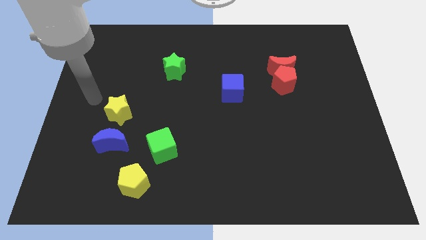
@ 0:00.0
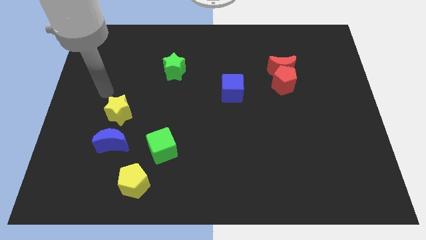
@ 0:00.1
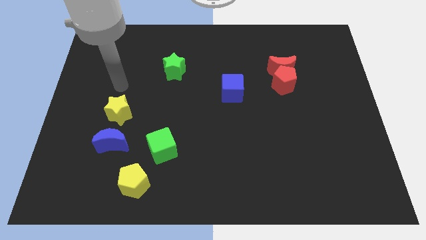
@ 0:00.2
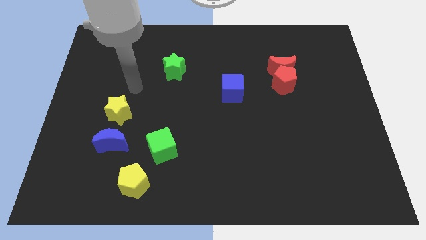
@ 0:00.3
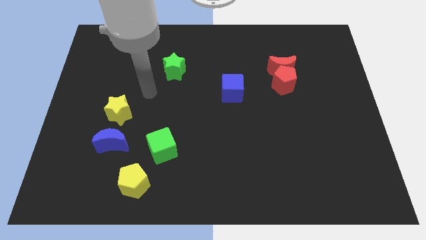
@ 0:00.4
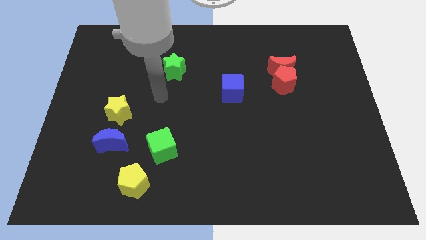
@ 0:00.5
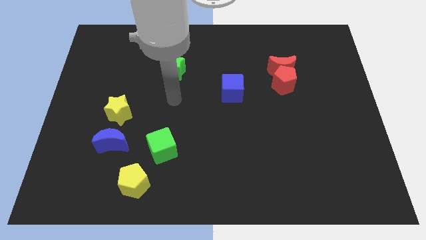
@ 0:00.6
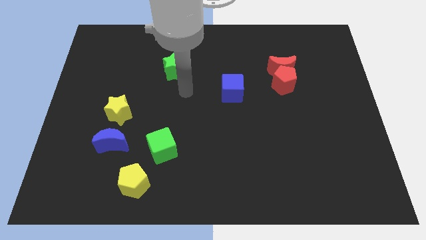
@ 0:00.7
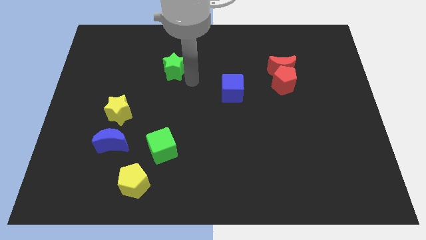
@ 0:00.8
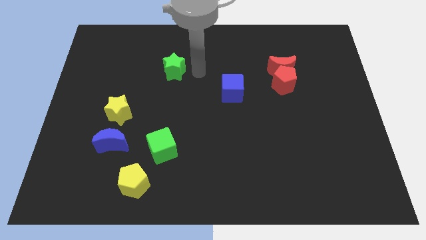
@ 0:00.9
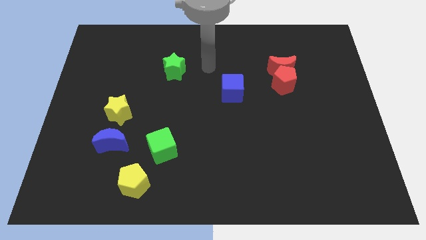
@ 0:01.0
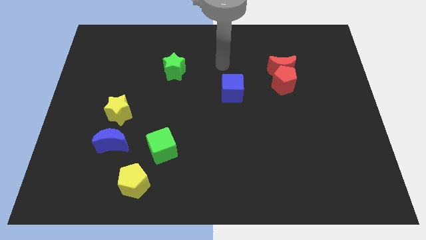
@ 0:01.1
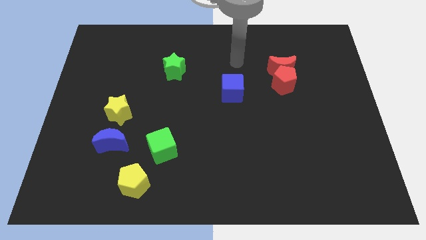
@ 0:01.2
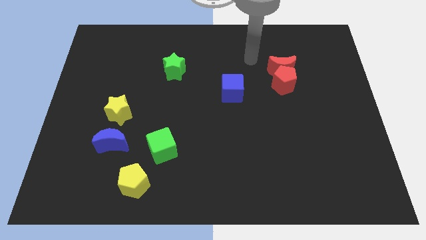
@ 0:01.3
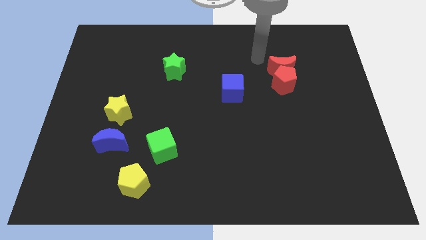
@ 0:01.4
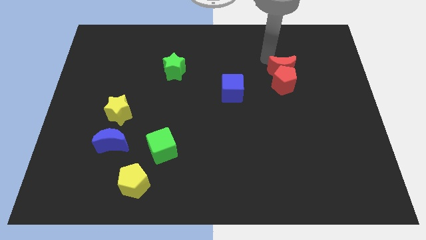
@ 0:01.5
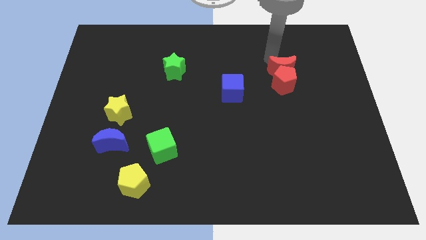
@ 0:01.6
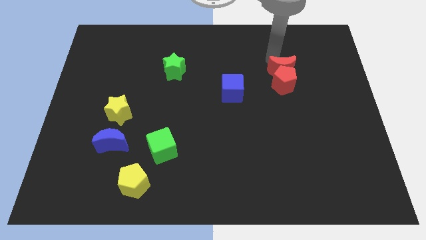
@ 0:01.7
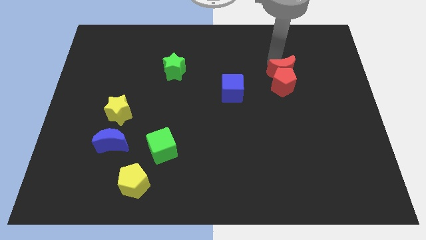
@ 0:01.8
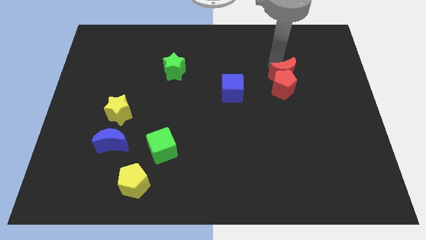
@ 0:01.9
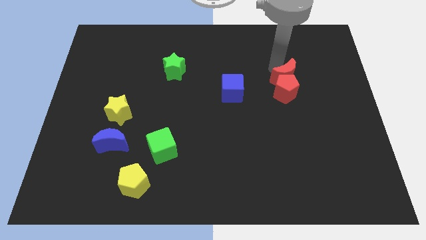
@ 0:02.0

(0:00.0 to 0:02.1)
move your arm towards the red moon

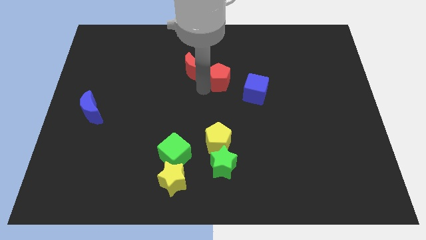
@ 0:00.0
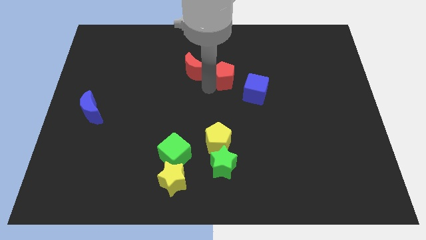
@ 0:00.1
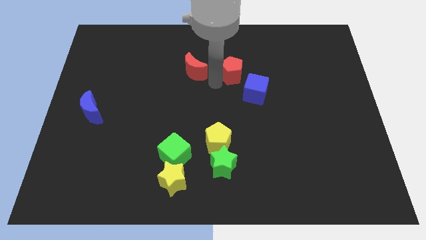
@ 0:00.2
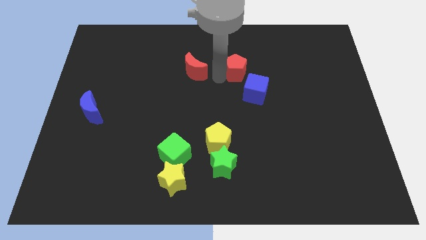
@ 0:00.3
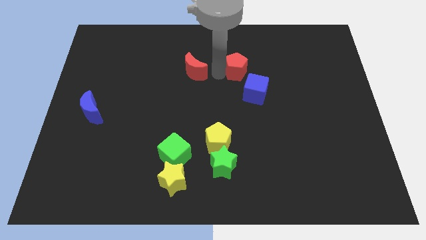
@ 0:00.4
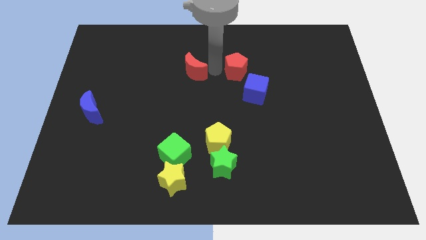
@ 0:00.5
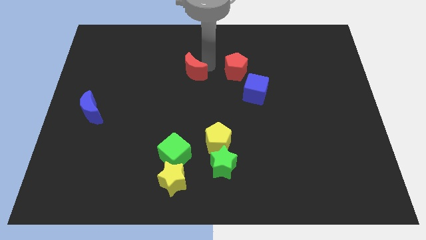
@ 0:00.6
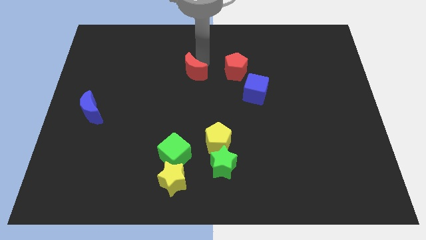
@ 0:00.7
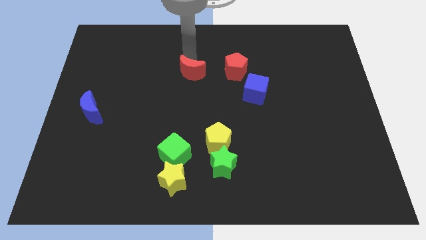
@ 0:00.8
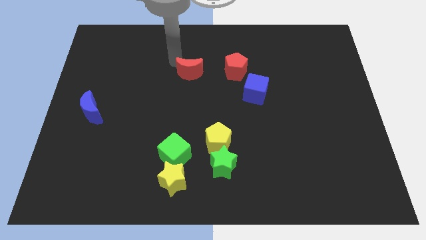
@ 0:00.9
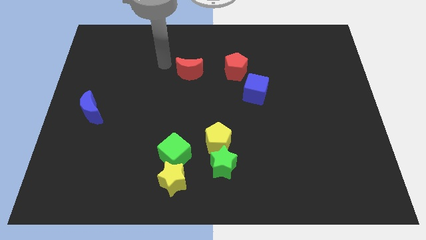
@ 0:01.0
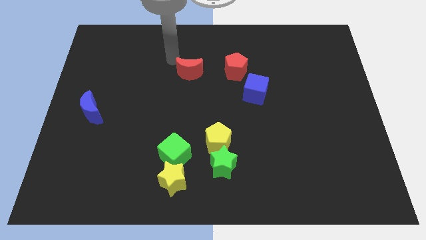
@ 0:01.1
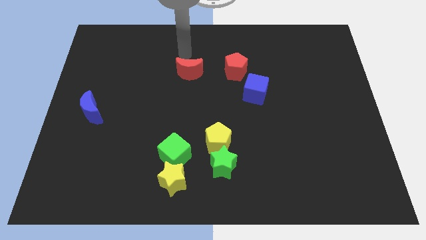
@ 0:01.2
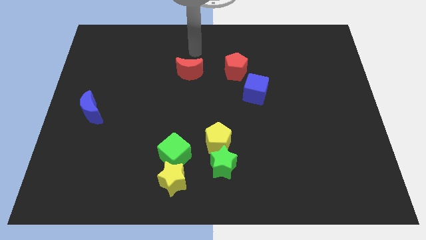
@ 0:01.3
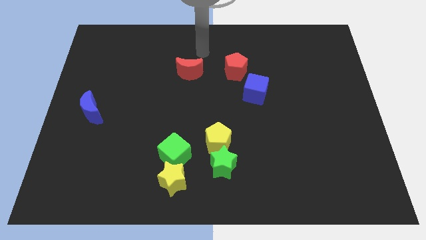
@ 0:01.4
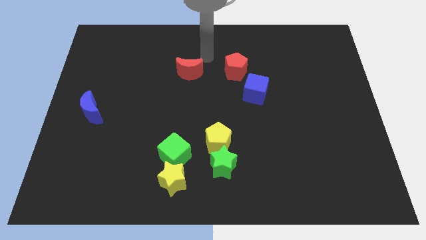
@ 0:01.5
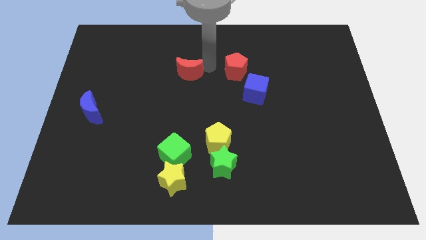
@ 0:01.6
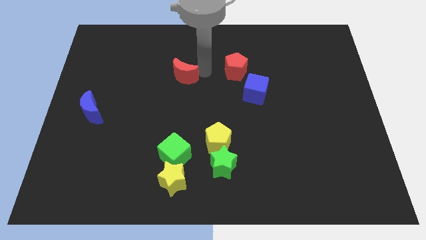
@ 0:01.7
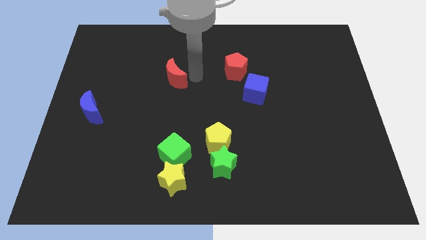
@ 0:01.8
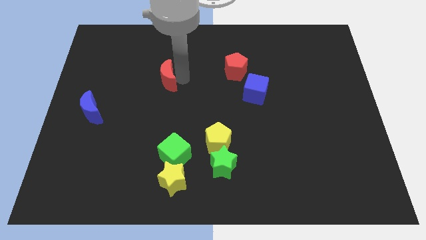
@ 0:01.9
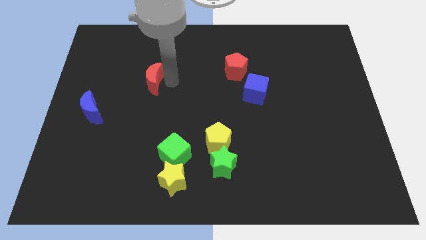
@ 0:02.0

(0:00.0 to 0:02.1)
slide the red crescent diagonally to yellow pentagon

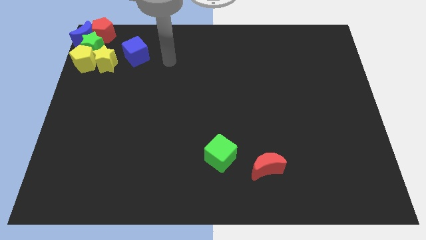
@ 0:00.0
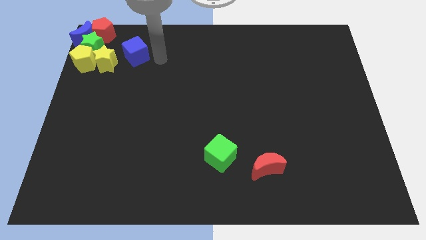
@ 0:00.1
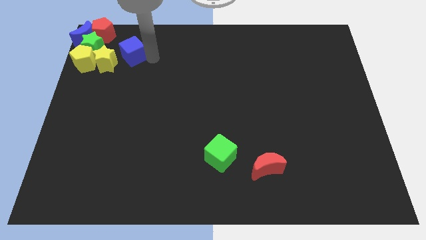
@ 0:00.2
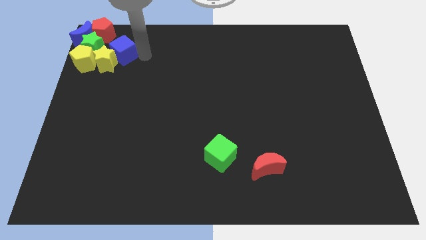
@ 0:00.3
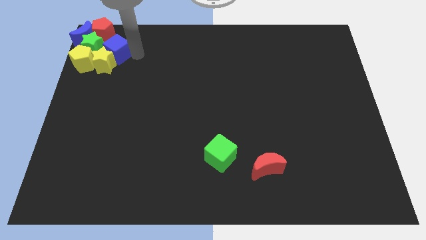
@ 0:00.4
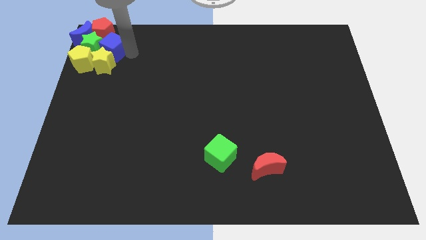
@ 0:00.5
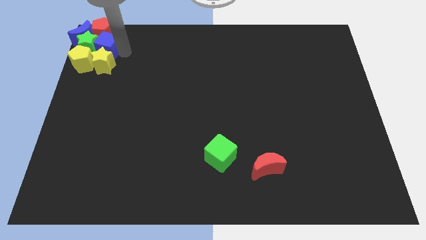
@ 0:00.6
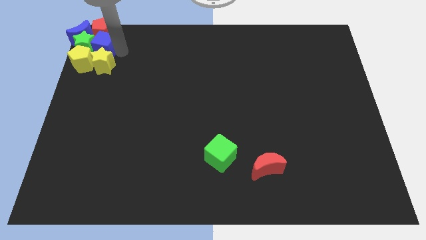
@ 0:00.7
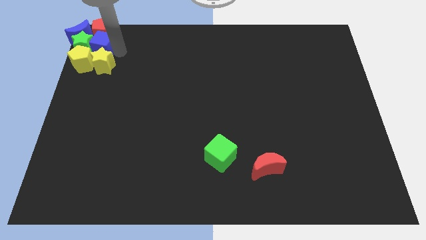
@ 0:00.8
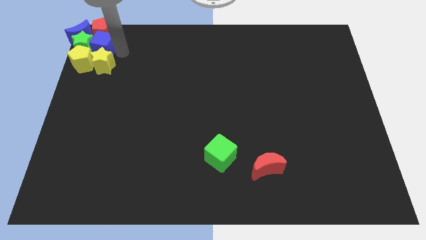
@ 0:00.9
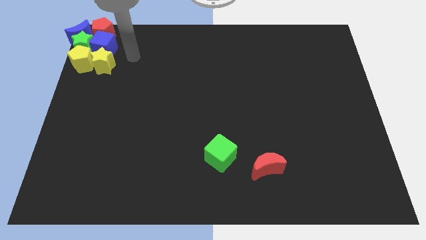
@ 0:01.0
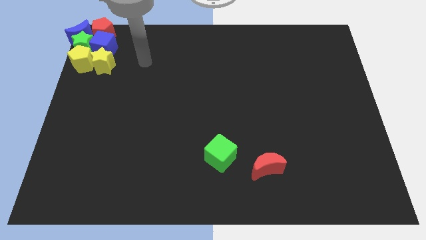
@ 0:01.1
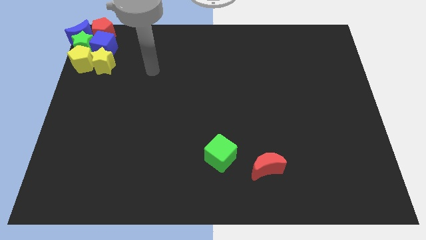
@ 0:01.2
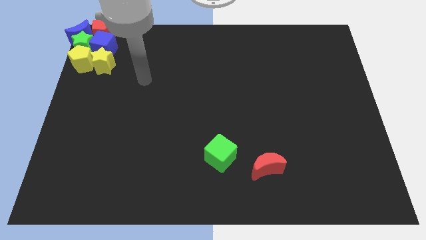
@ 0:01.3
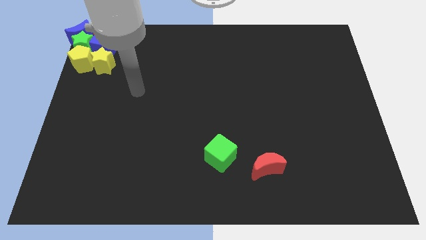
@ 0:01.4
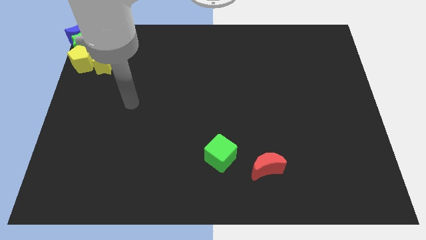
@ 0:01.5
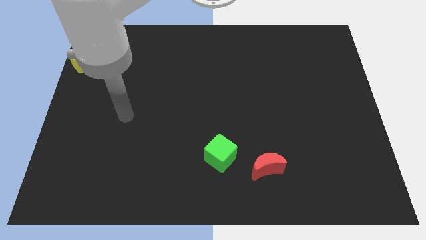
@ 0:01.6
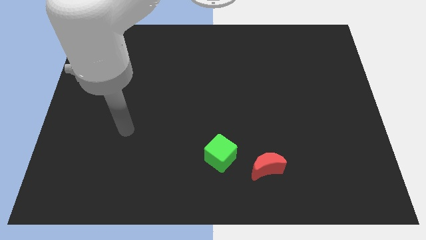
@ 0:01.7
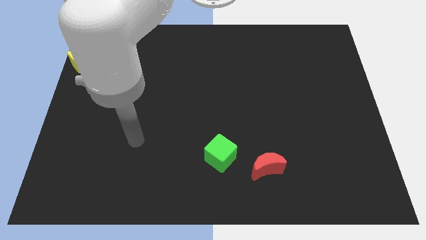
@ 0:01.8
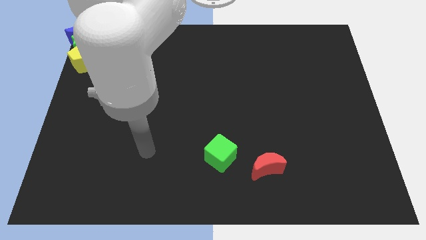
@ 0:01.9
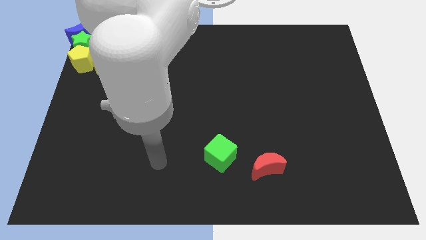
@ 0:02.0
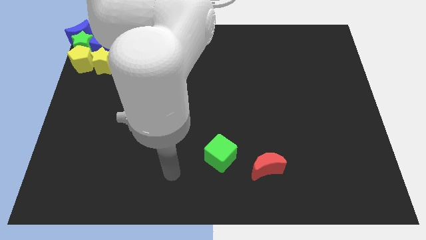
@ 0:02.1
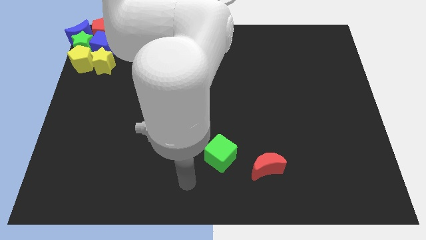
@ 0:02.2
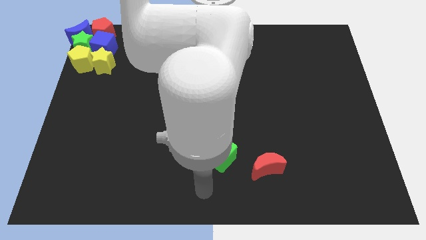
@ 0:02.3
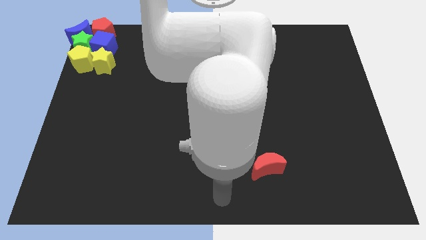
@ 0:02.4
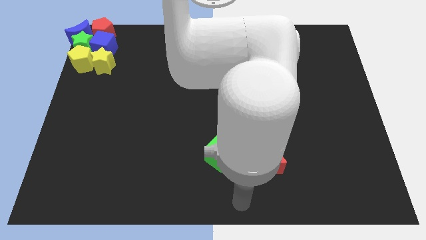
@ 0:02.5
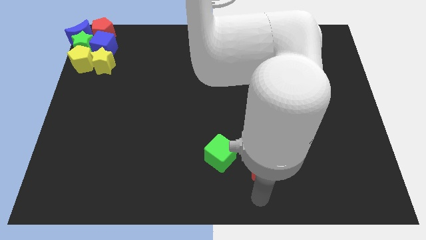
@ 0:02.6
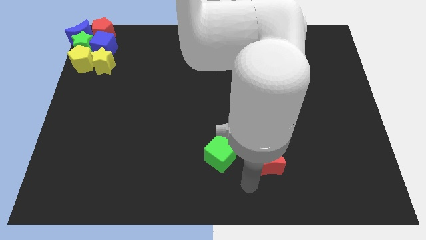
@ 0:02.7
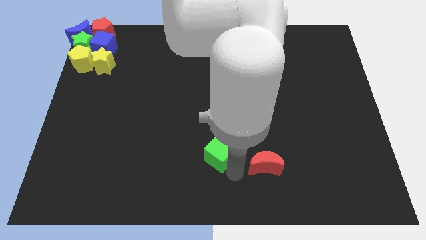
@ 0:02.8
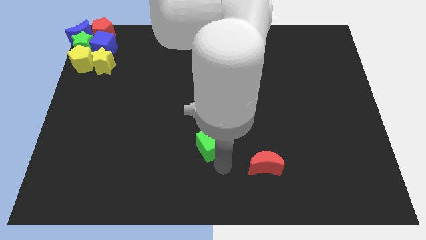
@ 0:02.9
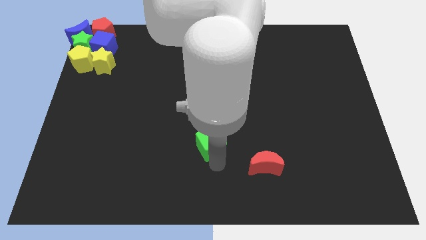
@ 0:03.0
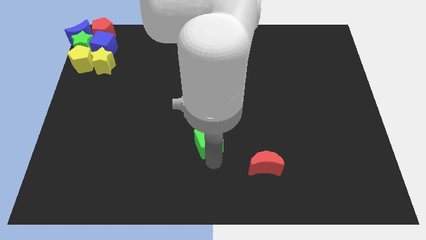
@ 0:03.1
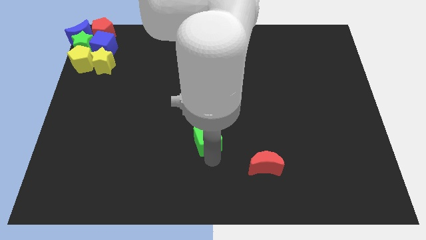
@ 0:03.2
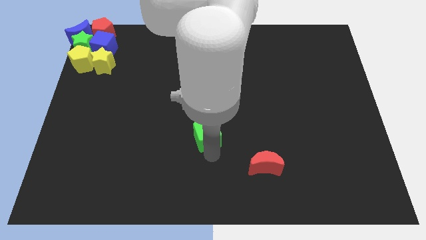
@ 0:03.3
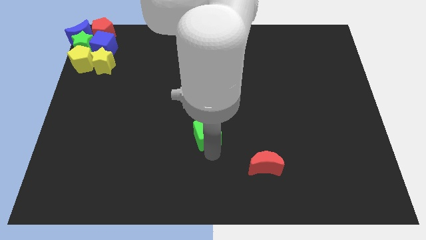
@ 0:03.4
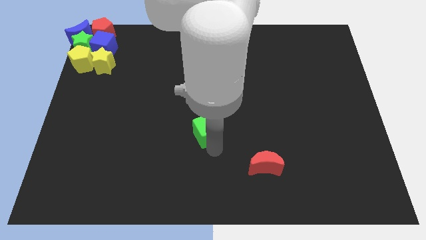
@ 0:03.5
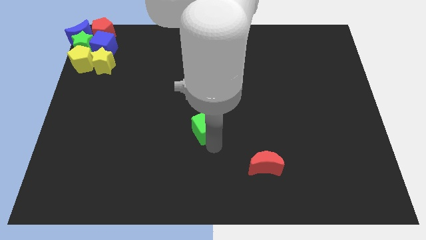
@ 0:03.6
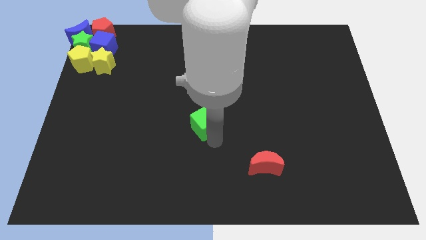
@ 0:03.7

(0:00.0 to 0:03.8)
push the green cube diagonally to the red moon

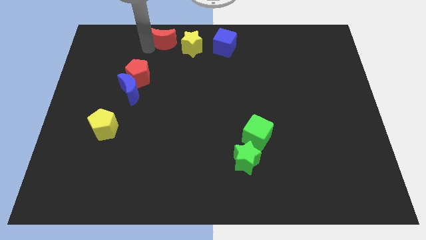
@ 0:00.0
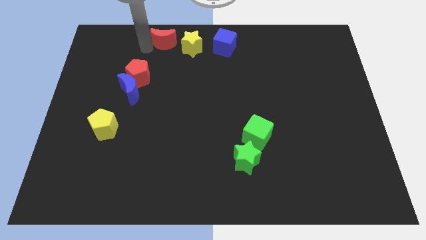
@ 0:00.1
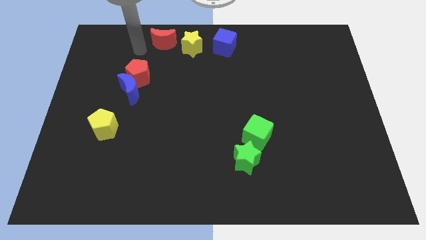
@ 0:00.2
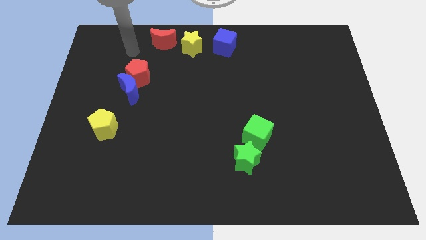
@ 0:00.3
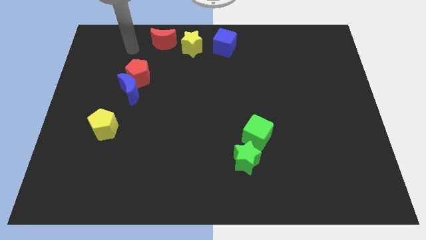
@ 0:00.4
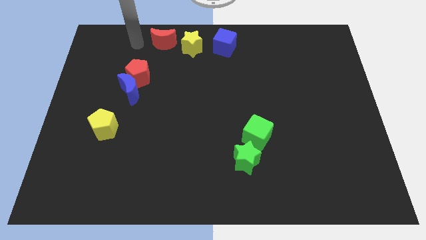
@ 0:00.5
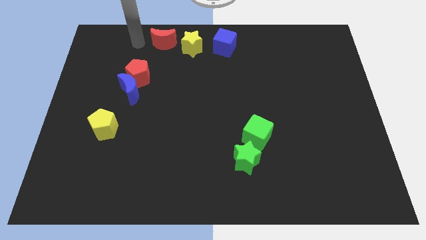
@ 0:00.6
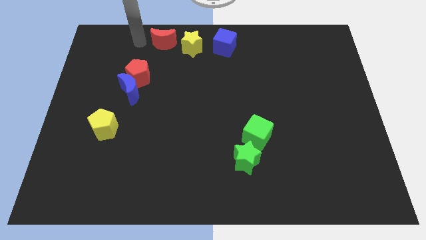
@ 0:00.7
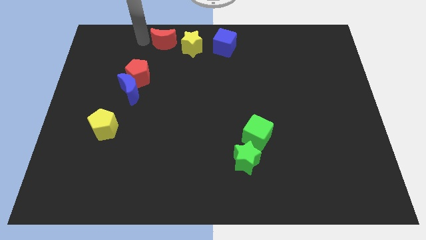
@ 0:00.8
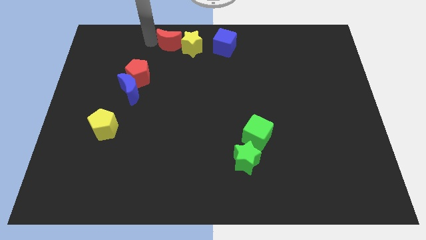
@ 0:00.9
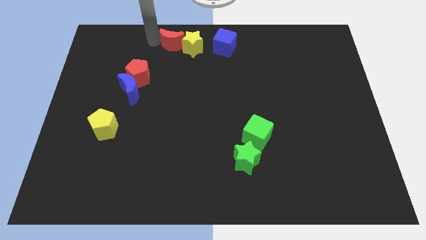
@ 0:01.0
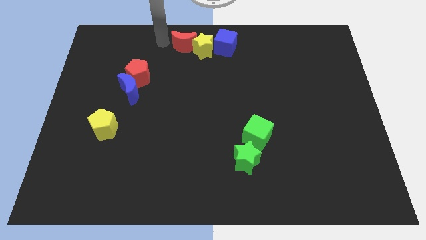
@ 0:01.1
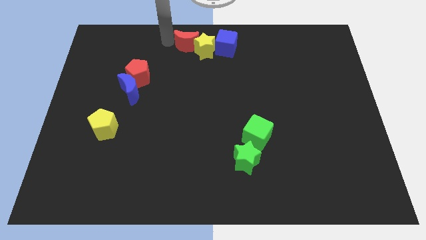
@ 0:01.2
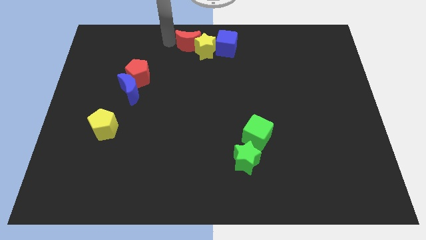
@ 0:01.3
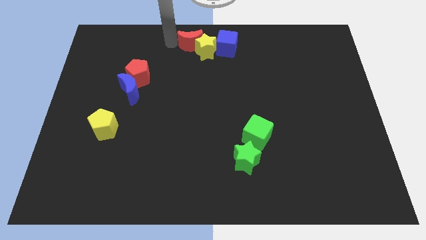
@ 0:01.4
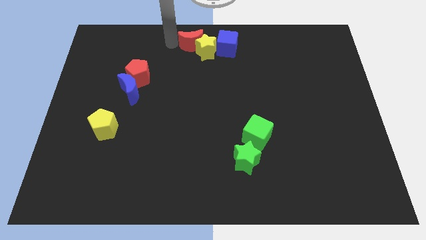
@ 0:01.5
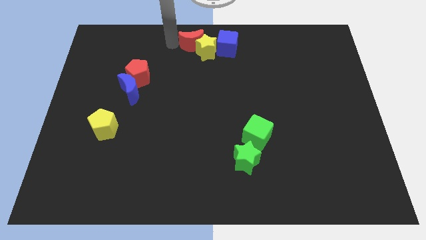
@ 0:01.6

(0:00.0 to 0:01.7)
move the red crescent into the yellow star
